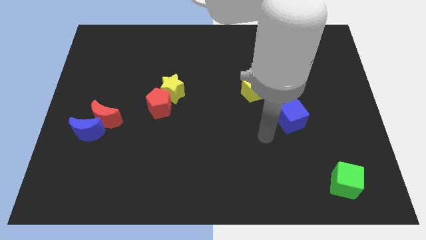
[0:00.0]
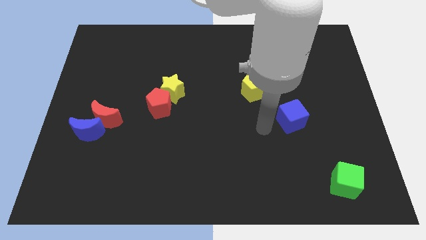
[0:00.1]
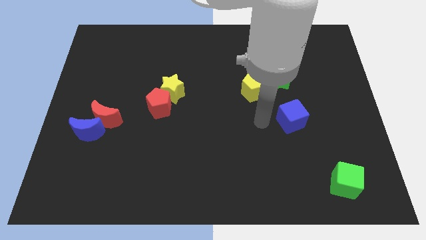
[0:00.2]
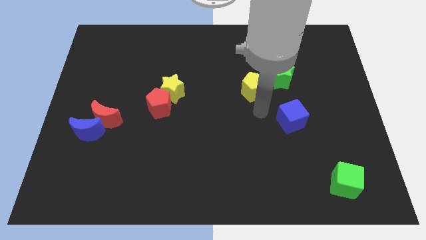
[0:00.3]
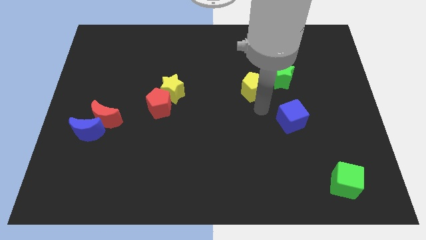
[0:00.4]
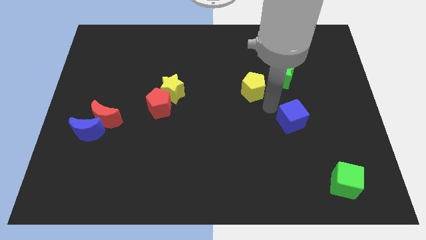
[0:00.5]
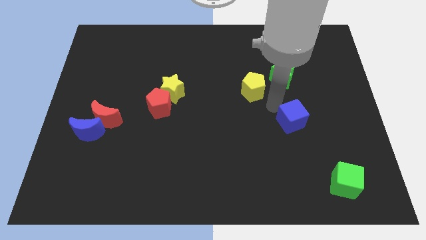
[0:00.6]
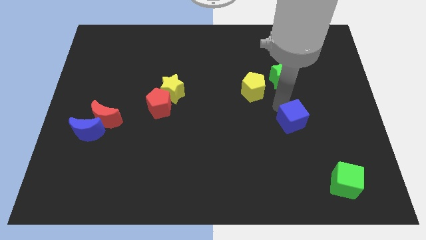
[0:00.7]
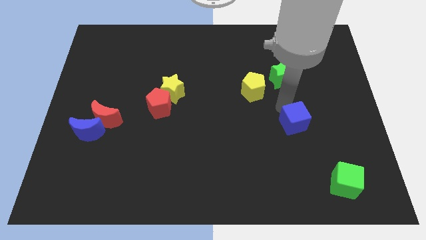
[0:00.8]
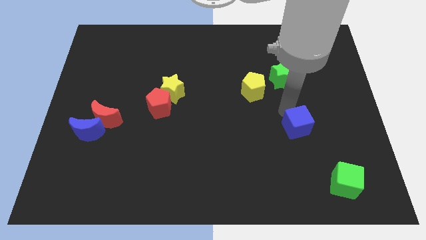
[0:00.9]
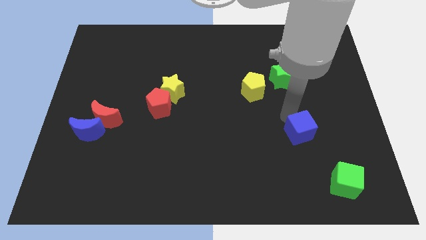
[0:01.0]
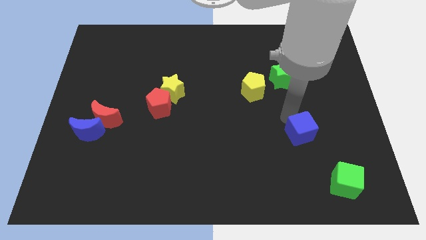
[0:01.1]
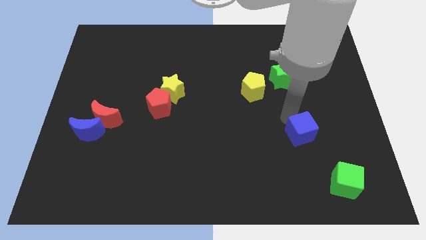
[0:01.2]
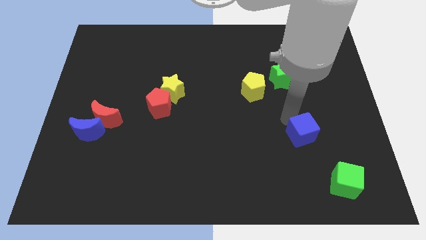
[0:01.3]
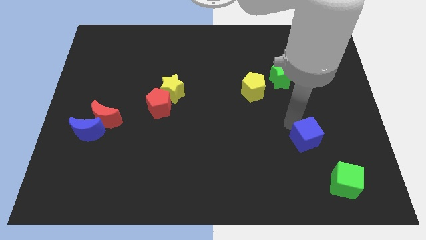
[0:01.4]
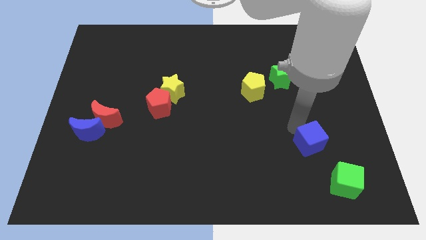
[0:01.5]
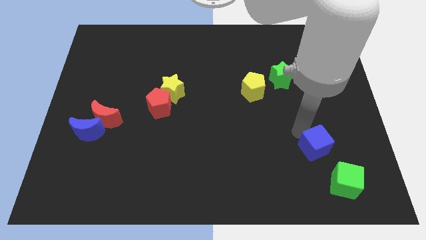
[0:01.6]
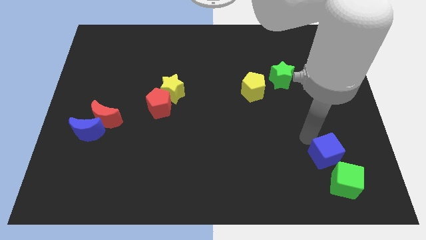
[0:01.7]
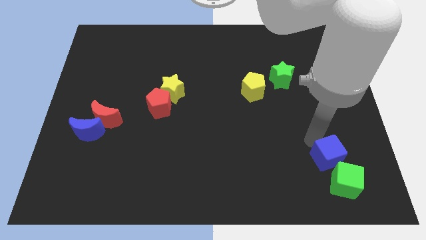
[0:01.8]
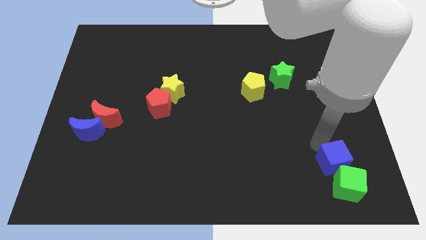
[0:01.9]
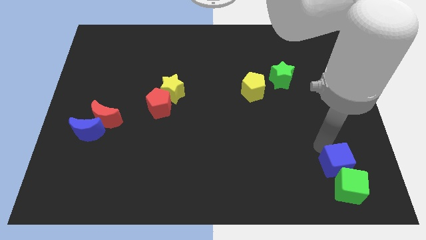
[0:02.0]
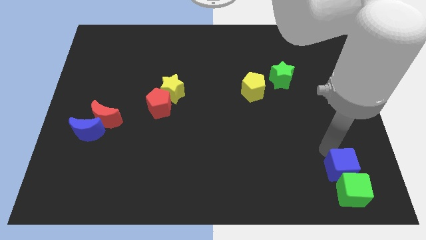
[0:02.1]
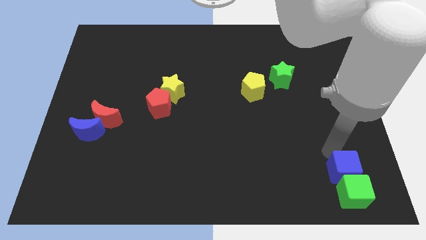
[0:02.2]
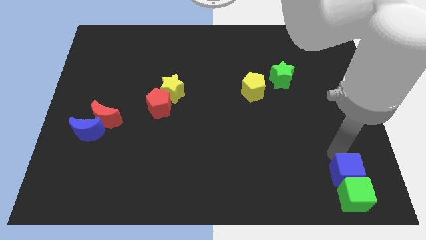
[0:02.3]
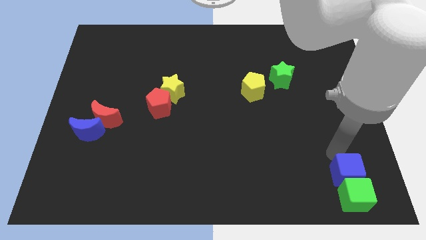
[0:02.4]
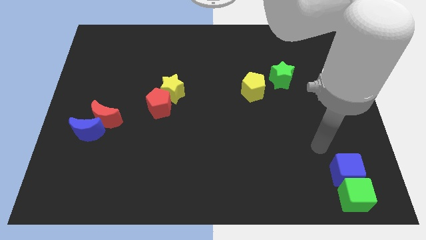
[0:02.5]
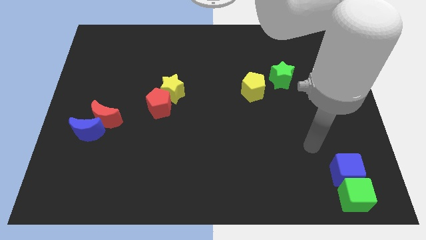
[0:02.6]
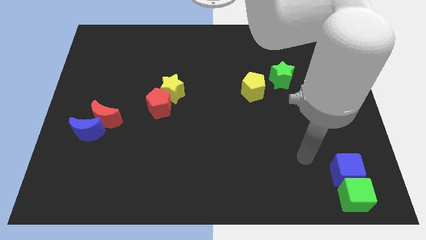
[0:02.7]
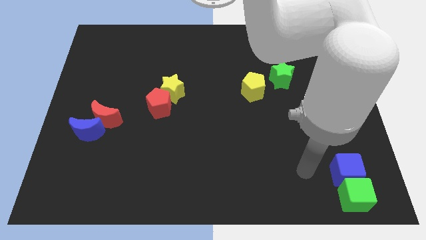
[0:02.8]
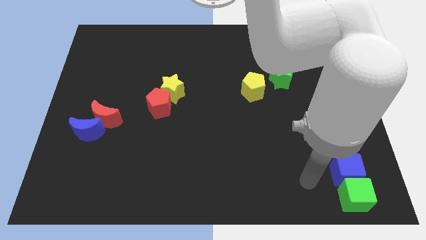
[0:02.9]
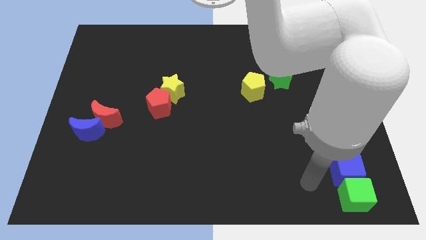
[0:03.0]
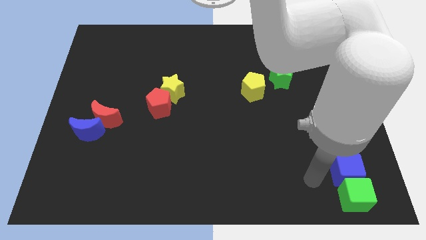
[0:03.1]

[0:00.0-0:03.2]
push the blue cube above the green cube

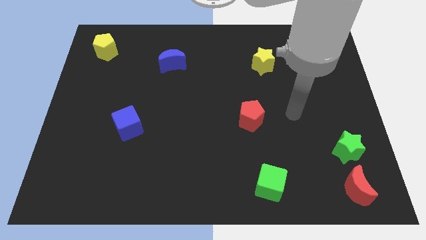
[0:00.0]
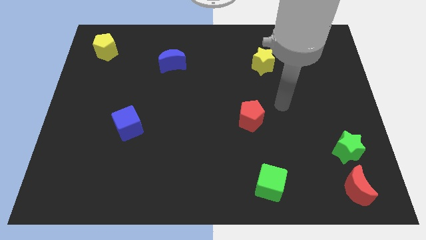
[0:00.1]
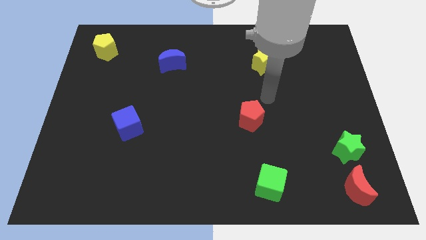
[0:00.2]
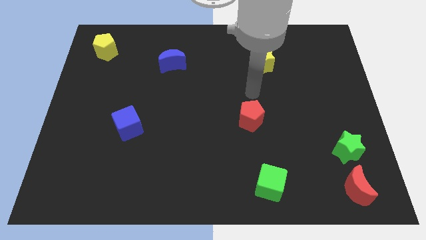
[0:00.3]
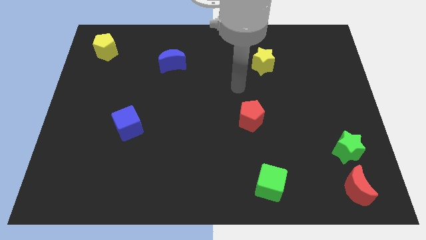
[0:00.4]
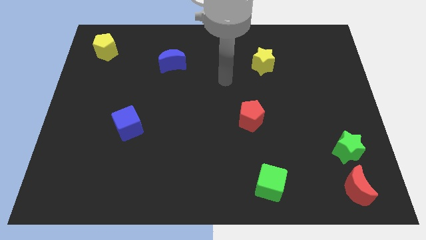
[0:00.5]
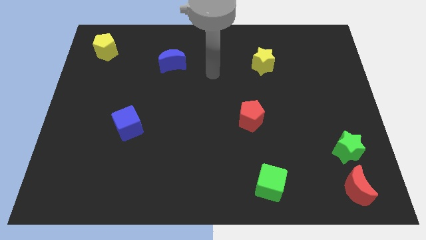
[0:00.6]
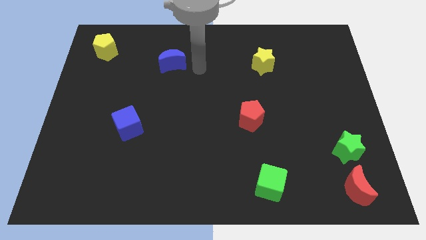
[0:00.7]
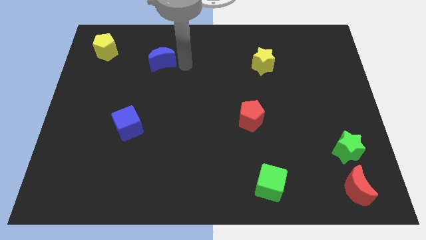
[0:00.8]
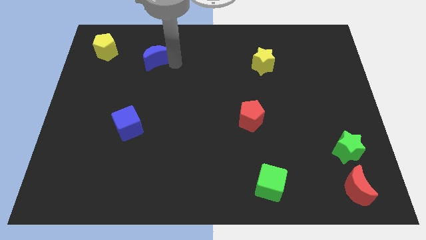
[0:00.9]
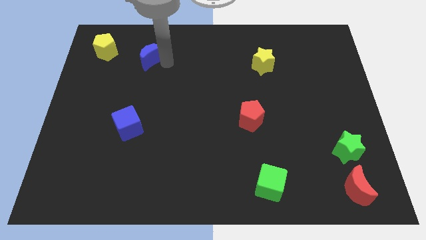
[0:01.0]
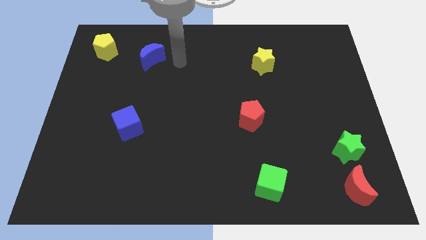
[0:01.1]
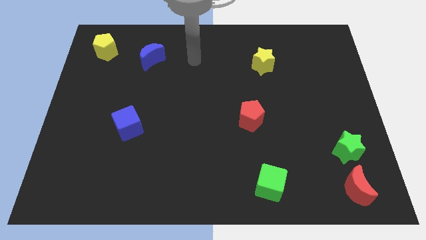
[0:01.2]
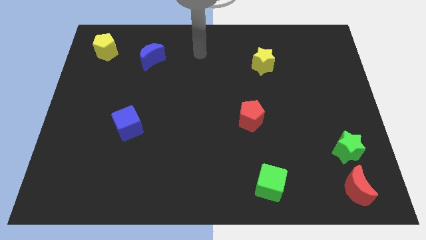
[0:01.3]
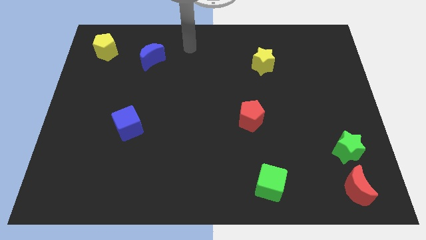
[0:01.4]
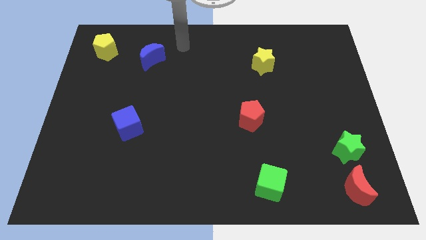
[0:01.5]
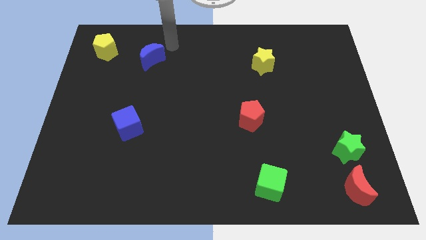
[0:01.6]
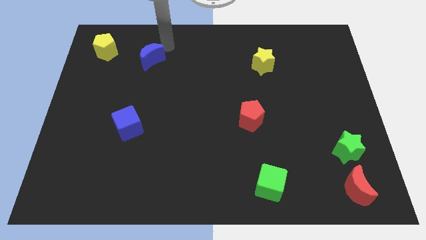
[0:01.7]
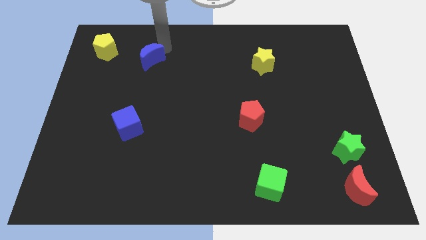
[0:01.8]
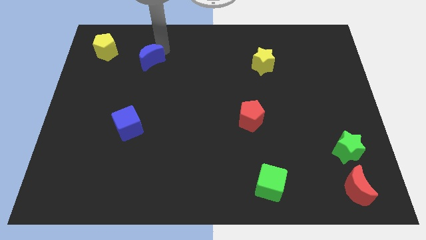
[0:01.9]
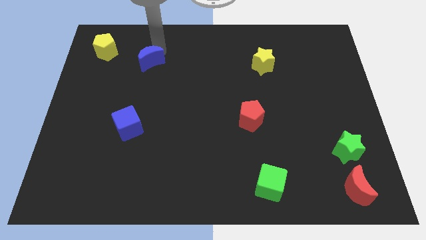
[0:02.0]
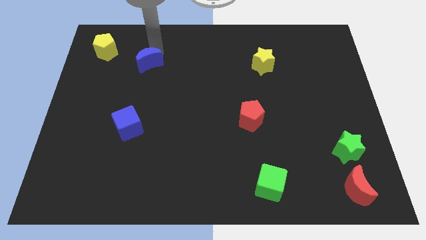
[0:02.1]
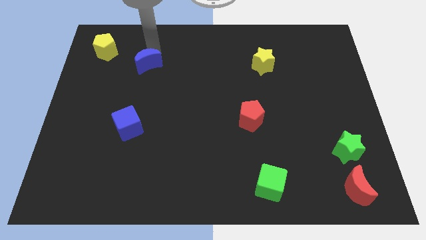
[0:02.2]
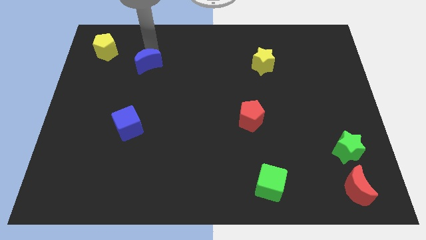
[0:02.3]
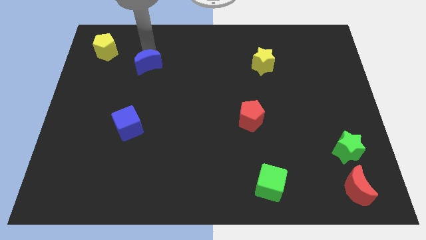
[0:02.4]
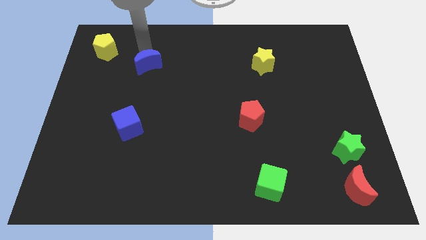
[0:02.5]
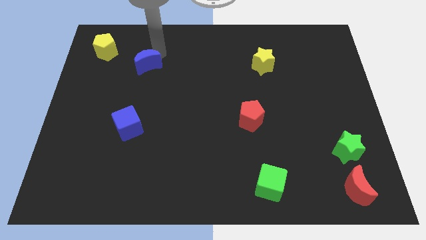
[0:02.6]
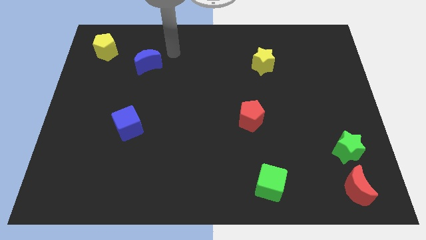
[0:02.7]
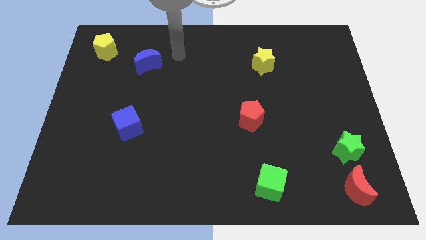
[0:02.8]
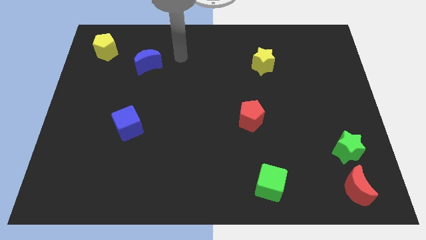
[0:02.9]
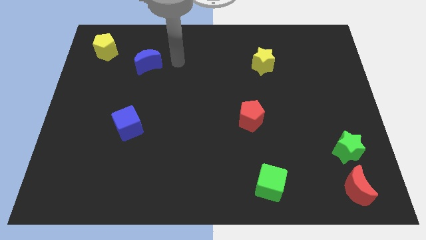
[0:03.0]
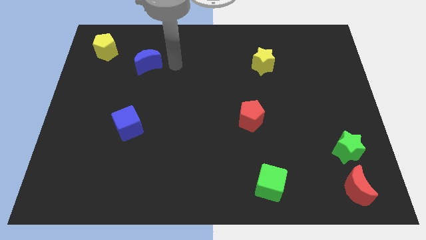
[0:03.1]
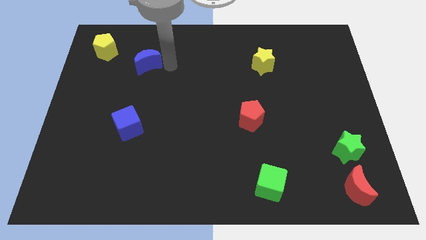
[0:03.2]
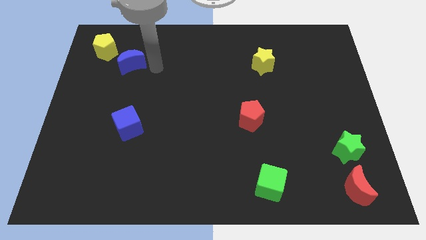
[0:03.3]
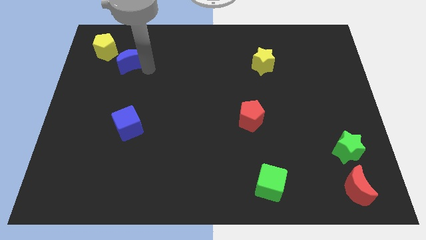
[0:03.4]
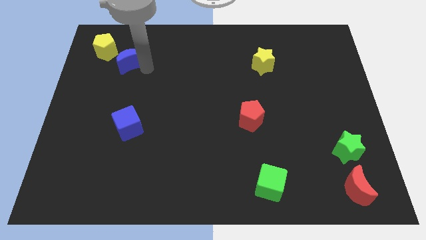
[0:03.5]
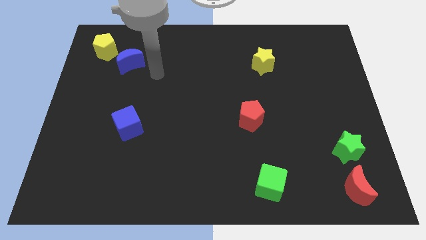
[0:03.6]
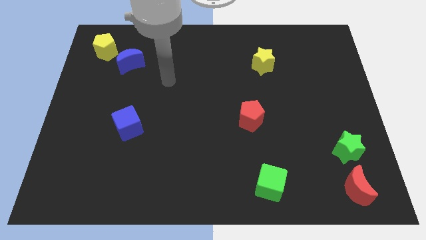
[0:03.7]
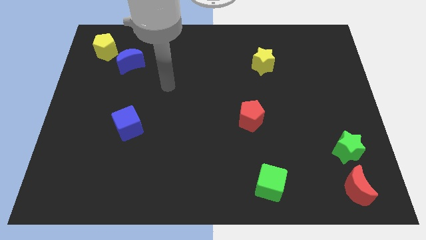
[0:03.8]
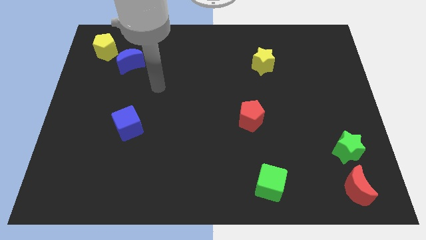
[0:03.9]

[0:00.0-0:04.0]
place the blue moon diagonally to the yellow pentagon

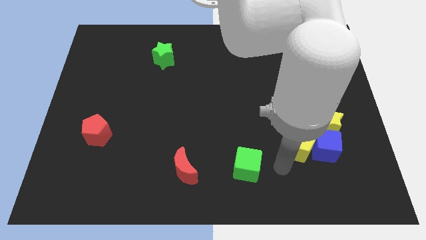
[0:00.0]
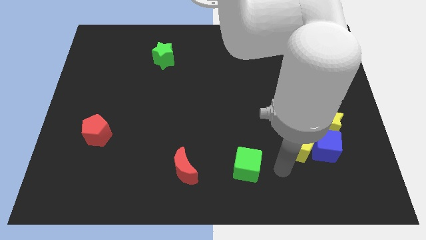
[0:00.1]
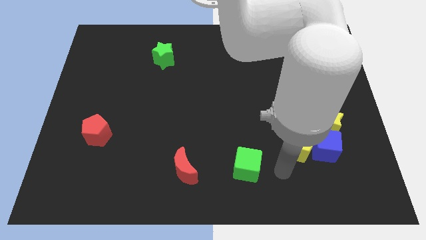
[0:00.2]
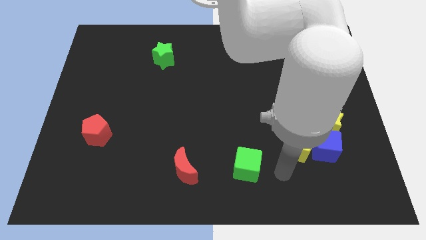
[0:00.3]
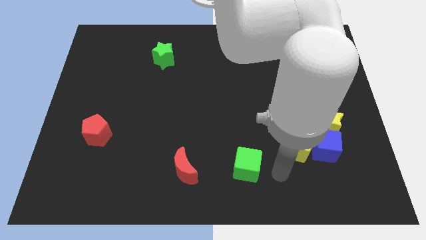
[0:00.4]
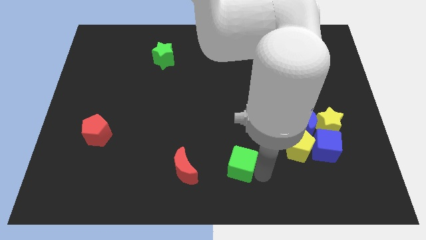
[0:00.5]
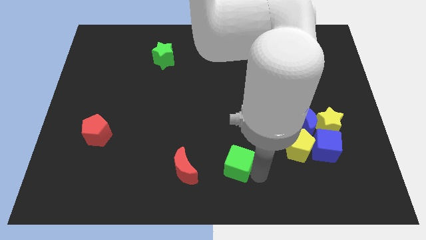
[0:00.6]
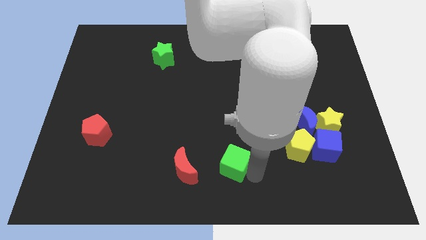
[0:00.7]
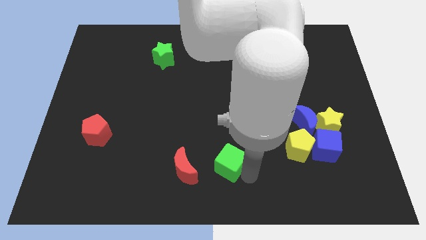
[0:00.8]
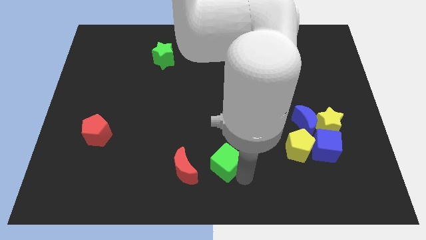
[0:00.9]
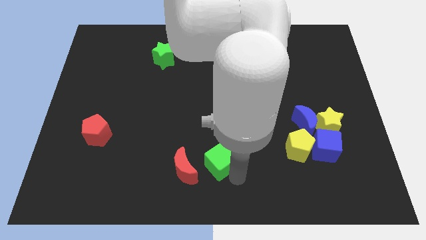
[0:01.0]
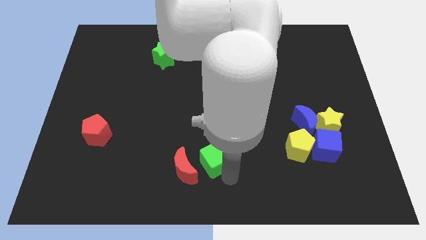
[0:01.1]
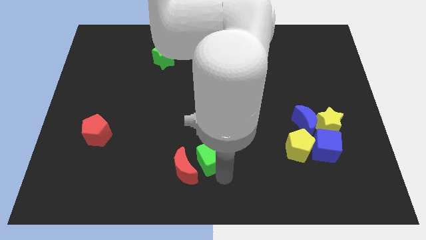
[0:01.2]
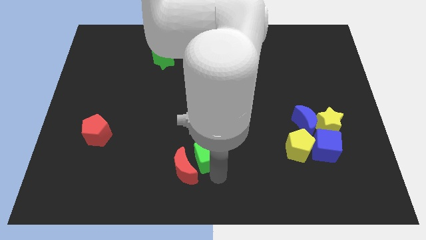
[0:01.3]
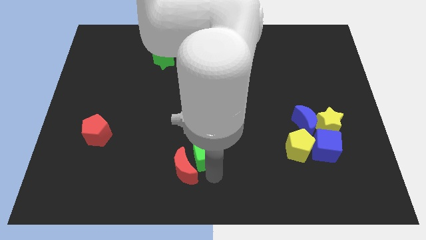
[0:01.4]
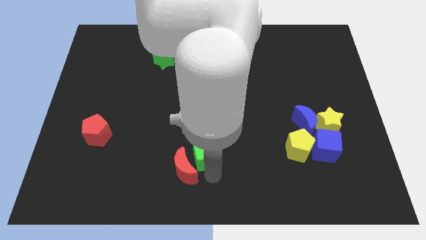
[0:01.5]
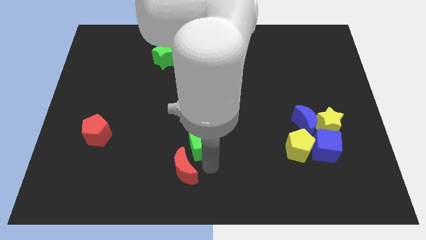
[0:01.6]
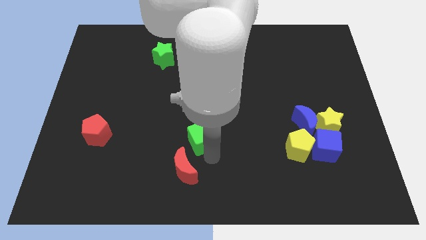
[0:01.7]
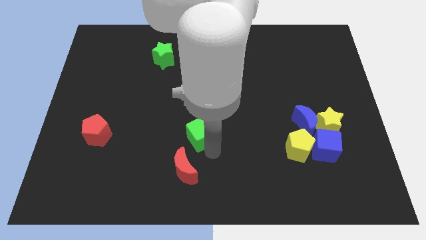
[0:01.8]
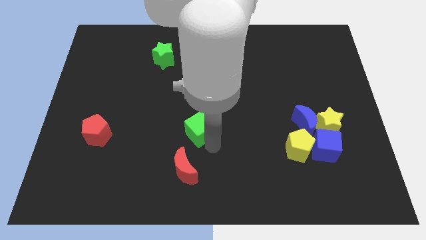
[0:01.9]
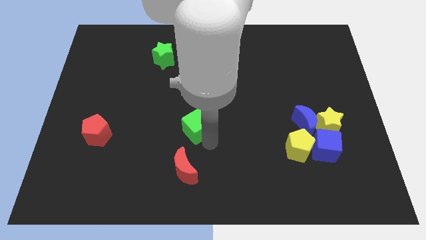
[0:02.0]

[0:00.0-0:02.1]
place the green cube above the red moon
